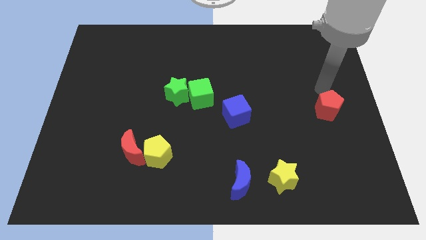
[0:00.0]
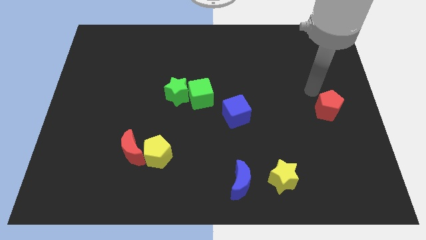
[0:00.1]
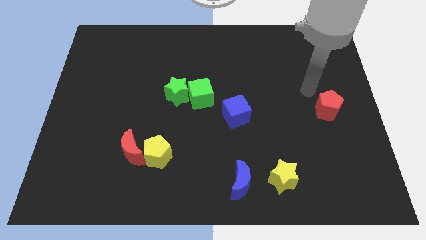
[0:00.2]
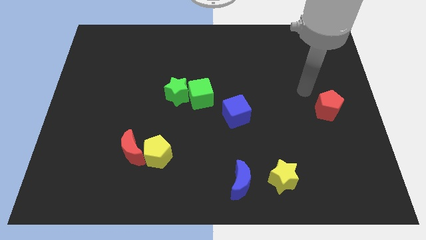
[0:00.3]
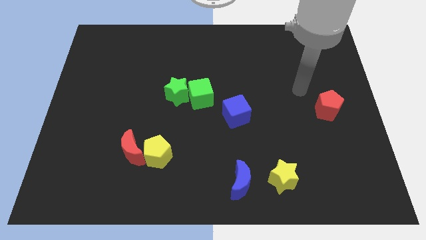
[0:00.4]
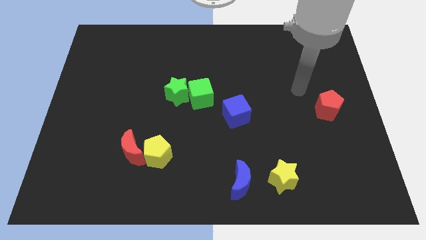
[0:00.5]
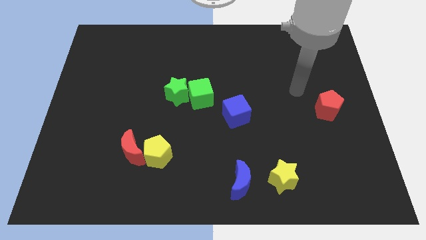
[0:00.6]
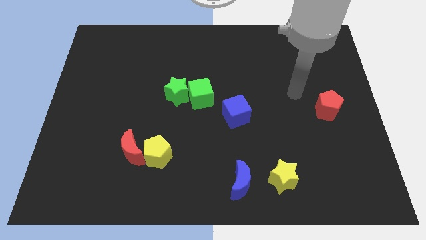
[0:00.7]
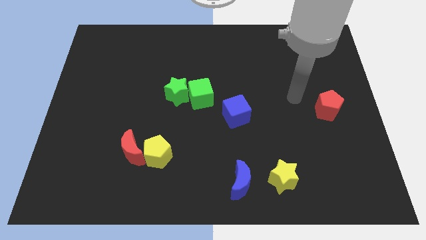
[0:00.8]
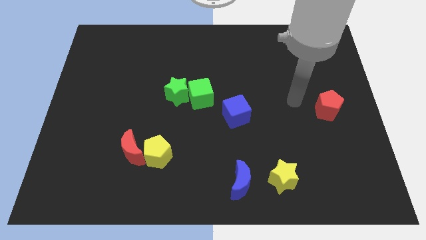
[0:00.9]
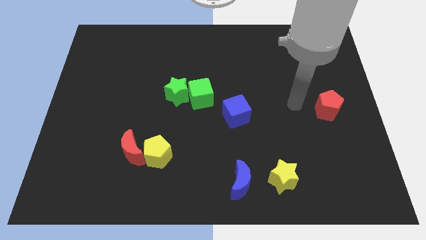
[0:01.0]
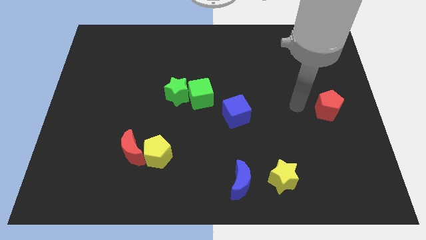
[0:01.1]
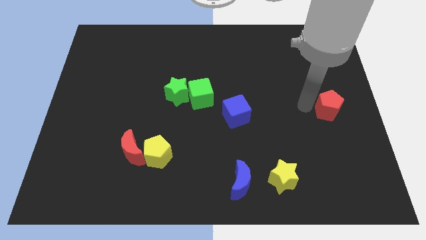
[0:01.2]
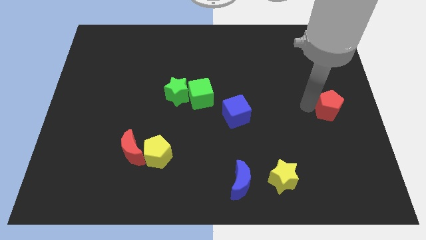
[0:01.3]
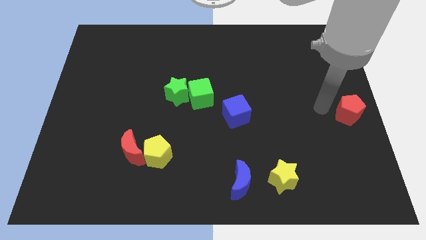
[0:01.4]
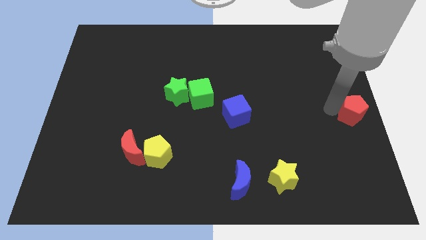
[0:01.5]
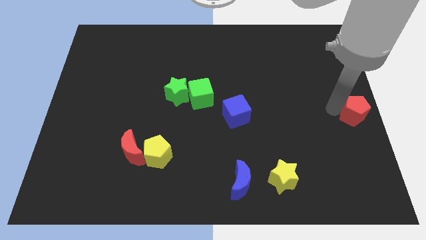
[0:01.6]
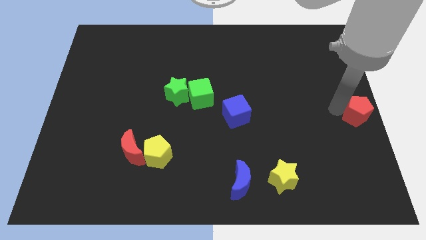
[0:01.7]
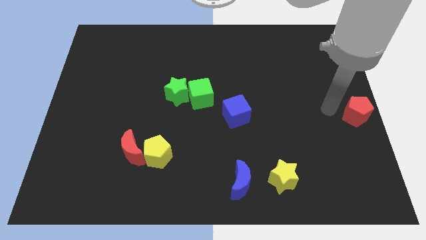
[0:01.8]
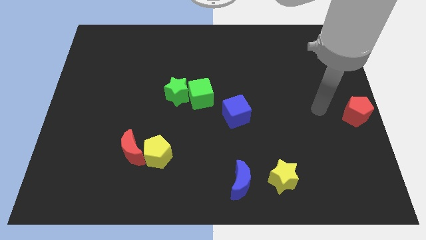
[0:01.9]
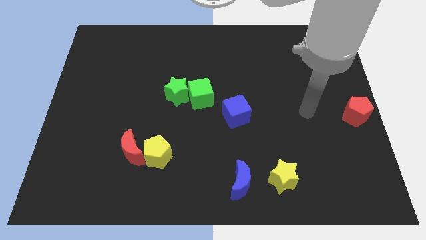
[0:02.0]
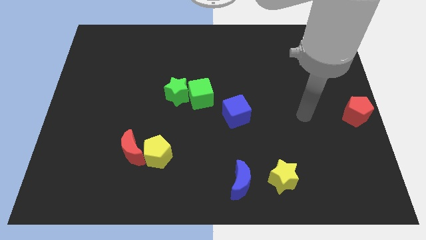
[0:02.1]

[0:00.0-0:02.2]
place red pentagon to the right center of the board

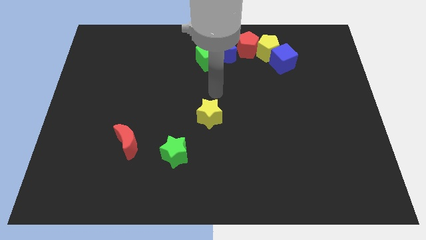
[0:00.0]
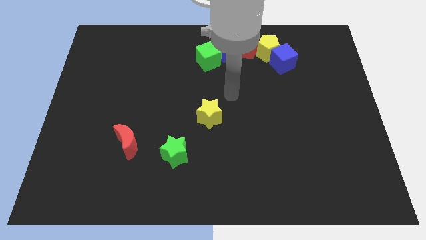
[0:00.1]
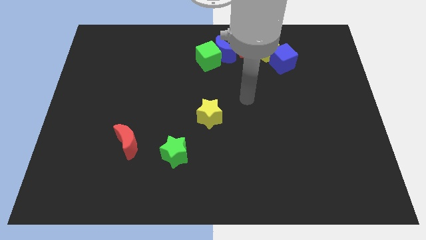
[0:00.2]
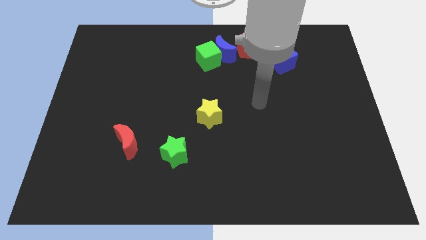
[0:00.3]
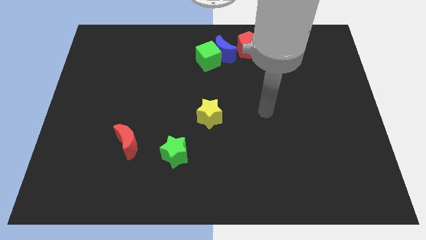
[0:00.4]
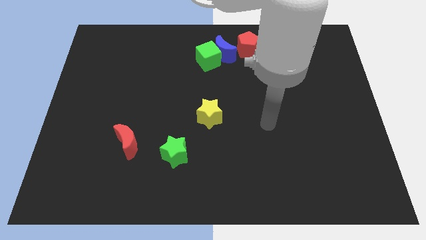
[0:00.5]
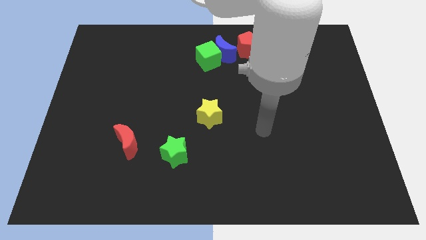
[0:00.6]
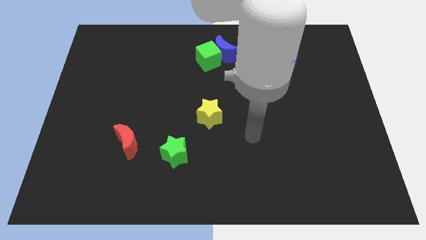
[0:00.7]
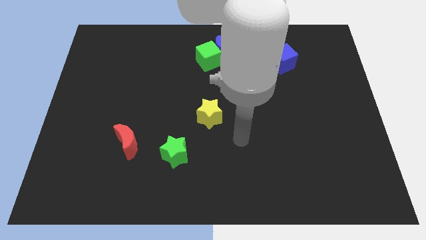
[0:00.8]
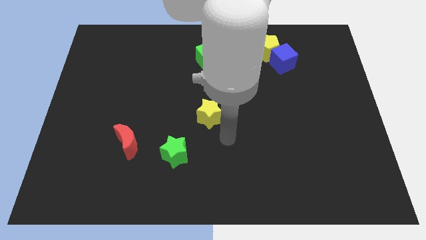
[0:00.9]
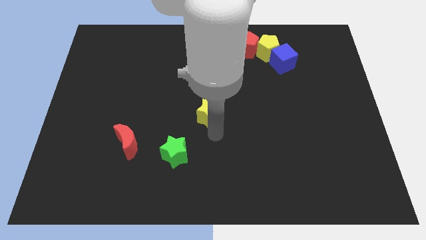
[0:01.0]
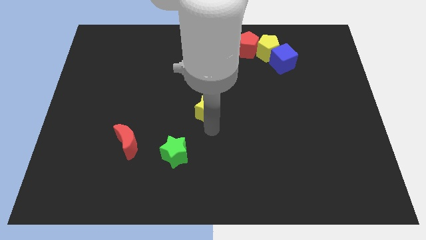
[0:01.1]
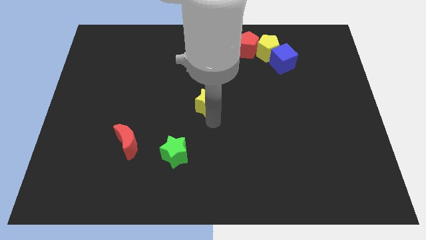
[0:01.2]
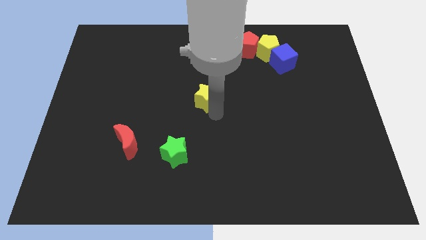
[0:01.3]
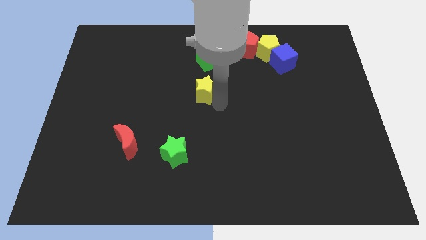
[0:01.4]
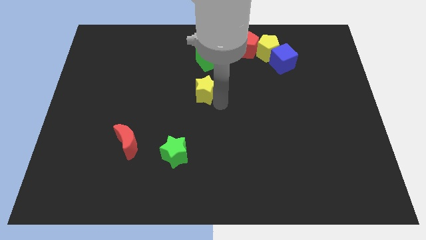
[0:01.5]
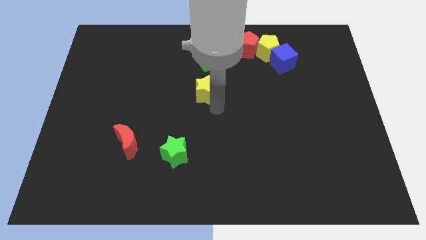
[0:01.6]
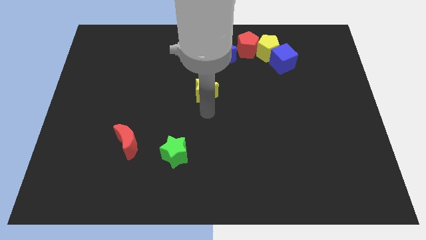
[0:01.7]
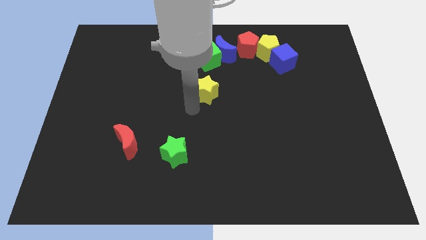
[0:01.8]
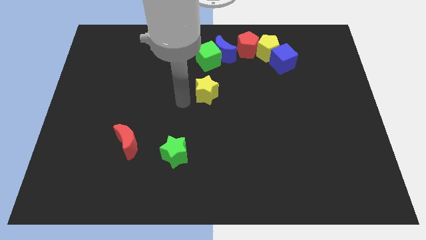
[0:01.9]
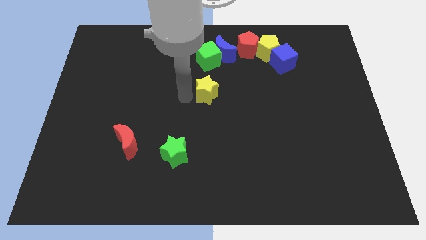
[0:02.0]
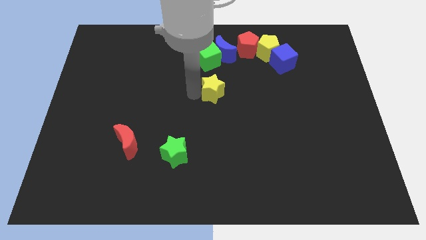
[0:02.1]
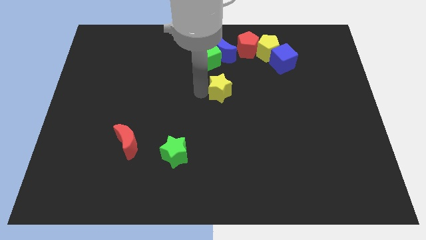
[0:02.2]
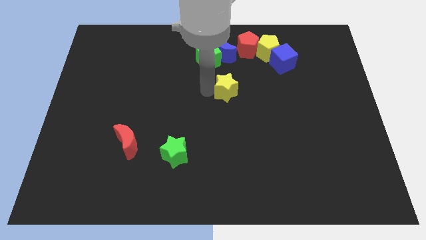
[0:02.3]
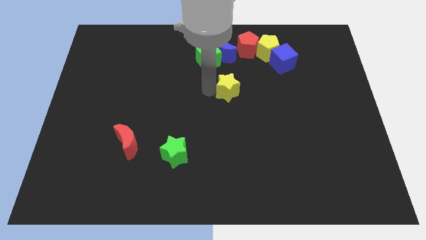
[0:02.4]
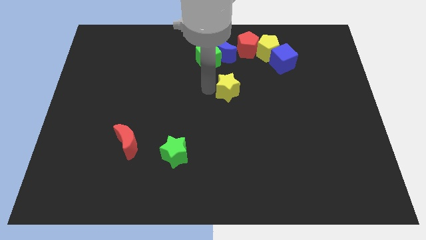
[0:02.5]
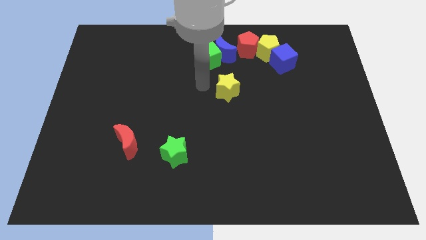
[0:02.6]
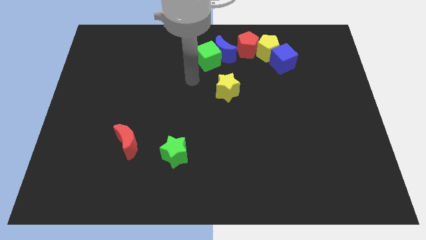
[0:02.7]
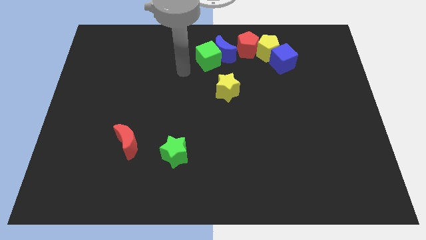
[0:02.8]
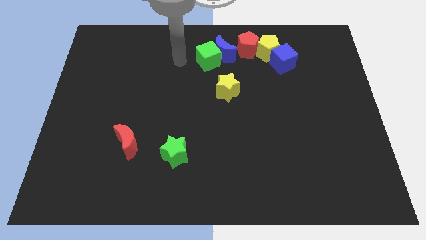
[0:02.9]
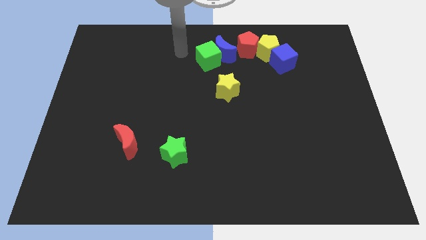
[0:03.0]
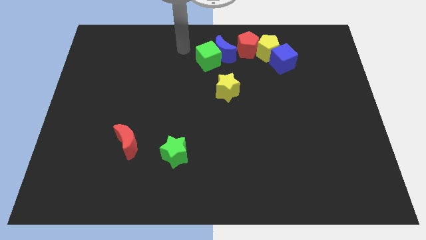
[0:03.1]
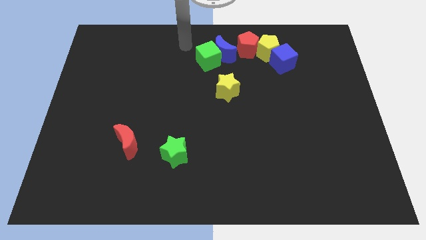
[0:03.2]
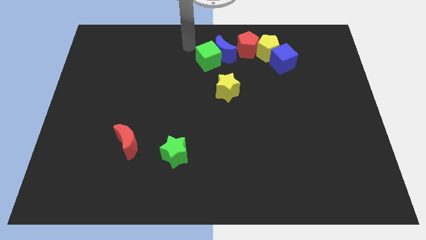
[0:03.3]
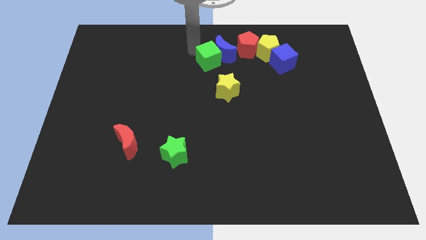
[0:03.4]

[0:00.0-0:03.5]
move the yellow star under the blue moon

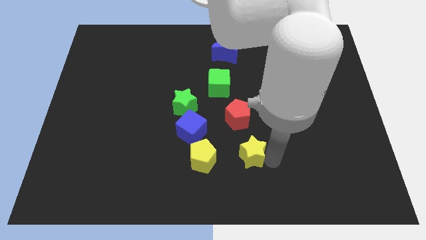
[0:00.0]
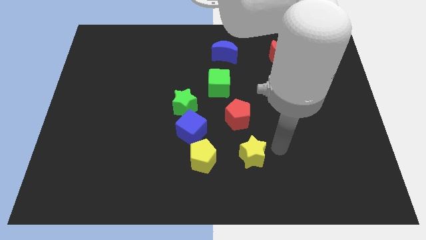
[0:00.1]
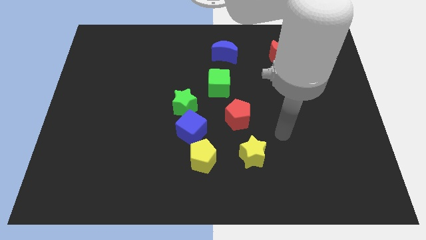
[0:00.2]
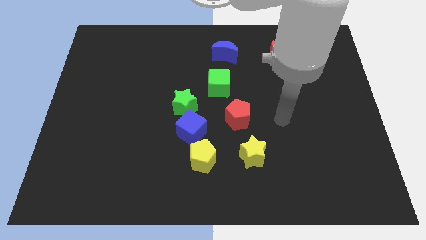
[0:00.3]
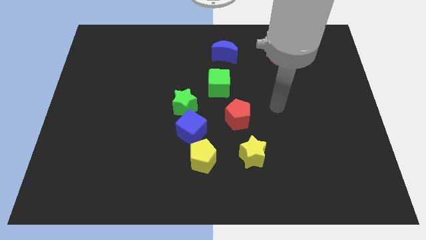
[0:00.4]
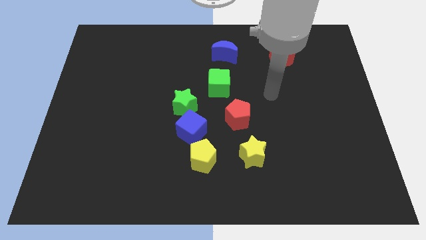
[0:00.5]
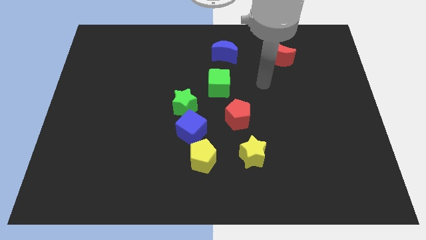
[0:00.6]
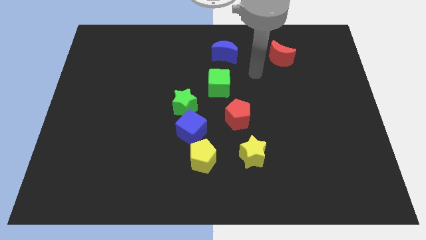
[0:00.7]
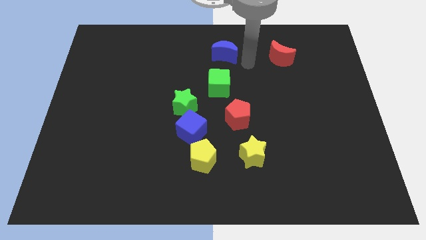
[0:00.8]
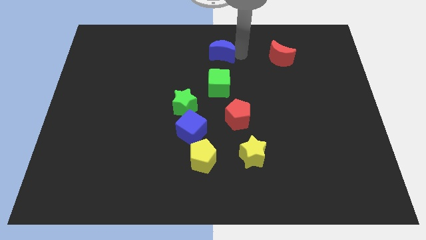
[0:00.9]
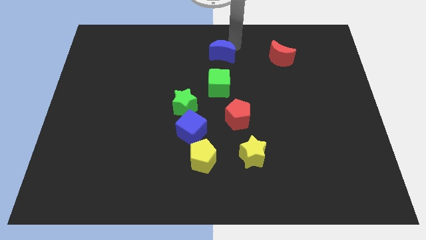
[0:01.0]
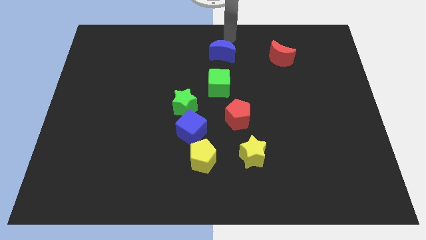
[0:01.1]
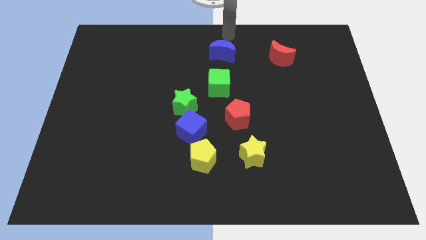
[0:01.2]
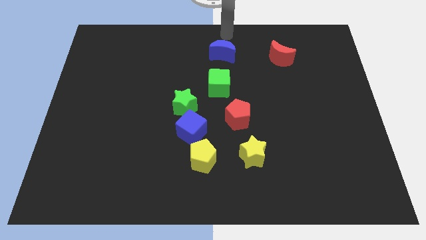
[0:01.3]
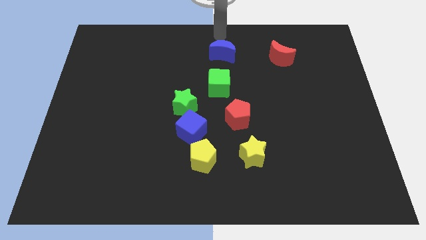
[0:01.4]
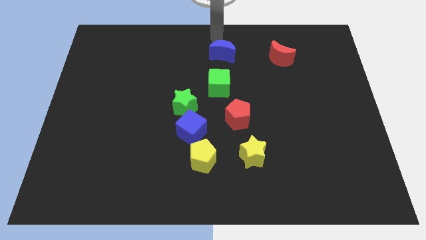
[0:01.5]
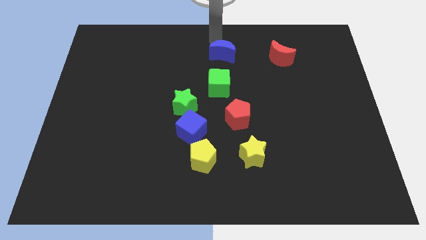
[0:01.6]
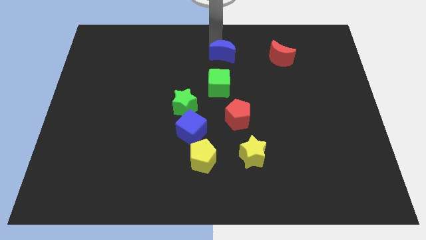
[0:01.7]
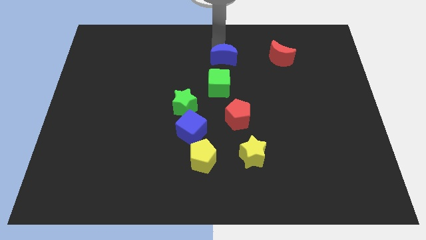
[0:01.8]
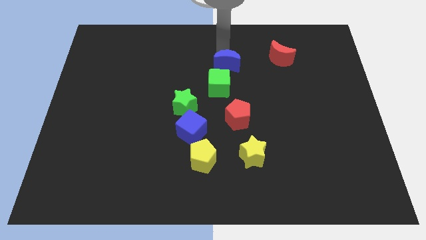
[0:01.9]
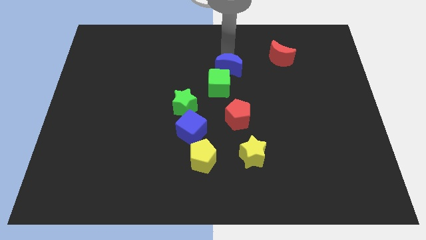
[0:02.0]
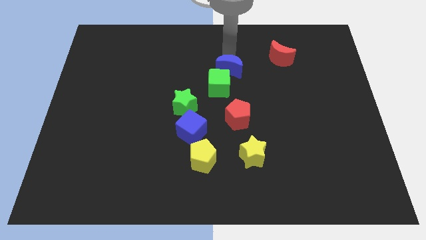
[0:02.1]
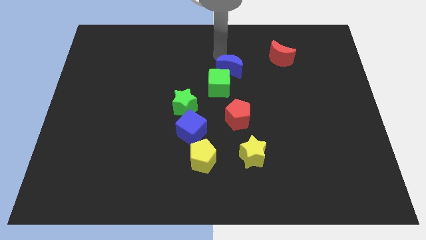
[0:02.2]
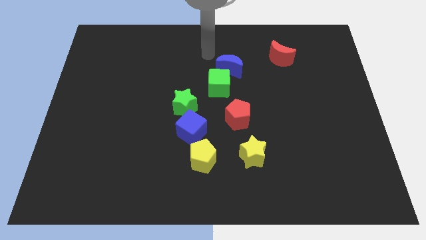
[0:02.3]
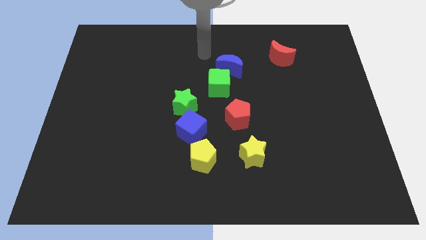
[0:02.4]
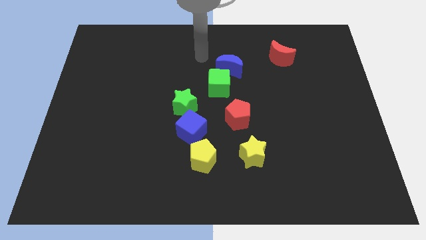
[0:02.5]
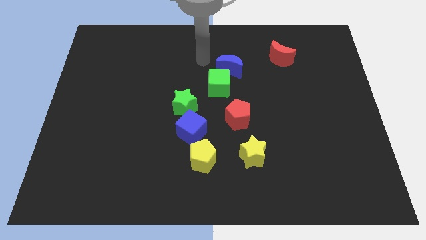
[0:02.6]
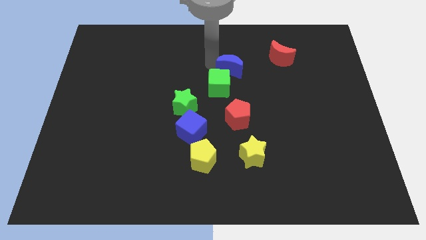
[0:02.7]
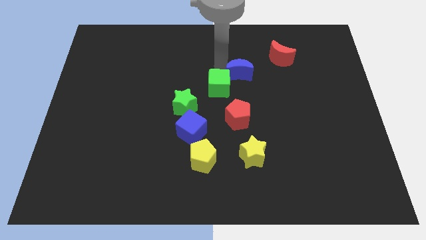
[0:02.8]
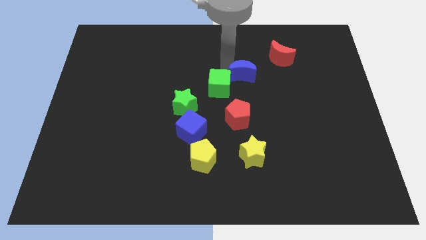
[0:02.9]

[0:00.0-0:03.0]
push blue moon towards green cube

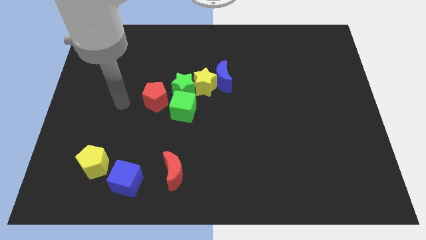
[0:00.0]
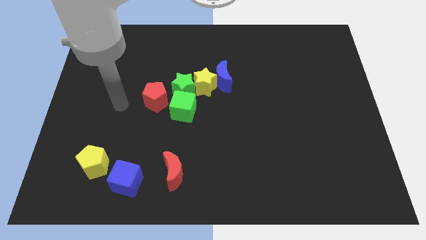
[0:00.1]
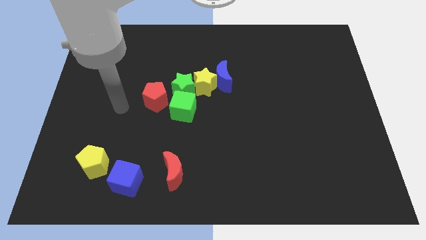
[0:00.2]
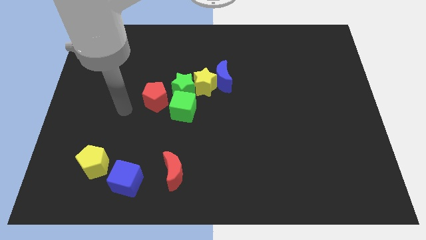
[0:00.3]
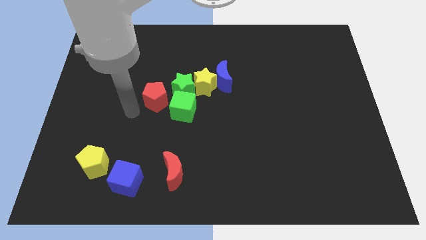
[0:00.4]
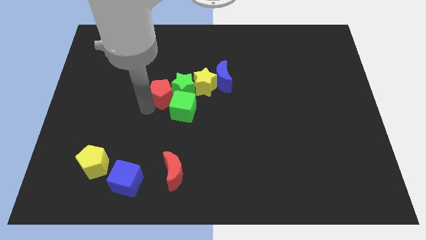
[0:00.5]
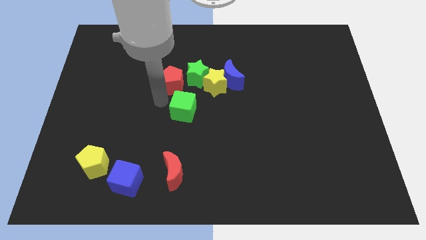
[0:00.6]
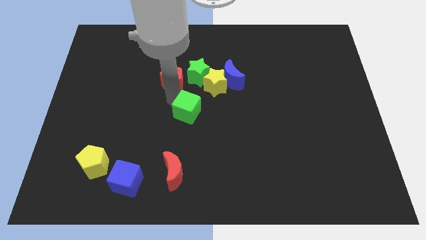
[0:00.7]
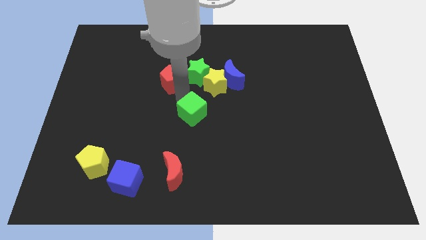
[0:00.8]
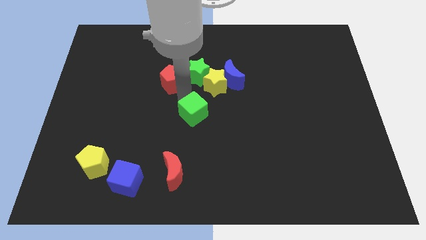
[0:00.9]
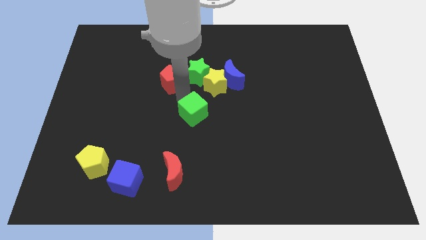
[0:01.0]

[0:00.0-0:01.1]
sepaarte the red pentagon and trhe green cube
